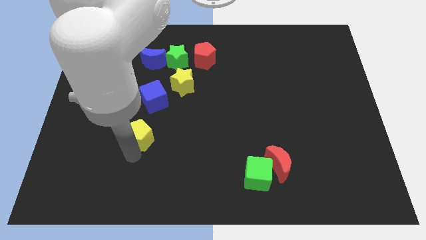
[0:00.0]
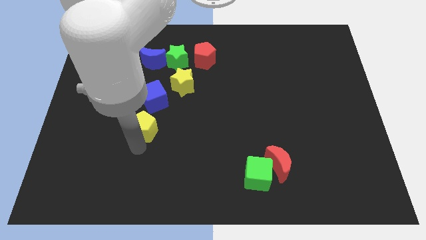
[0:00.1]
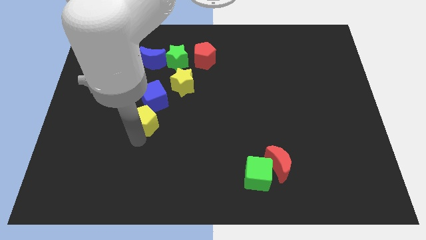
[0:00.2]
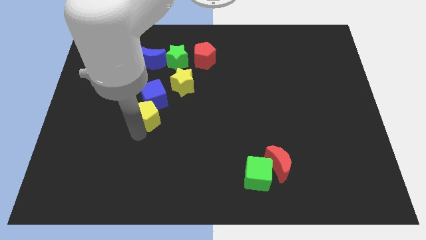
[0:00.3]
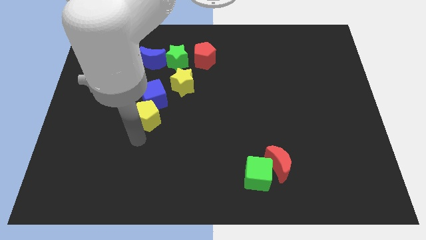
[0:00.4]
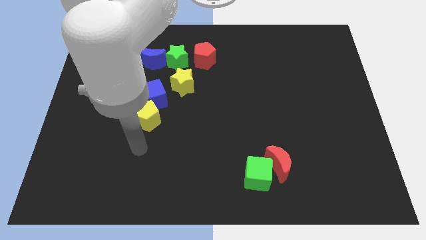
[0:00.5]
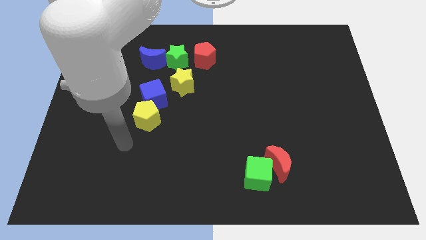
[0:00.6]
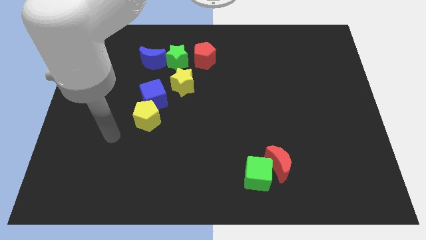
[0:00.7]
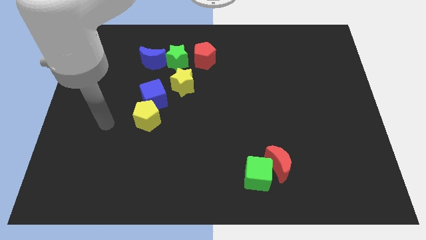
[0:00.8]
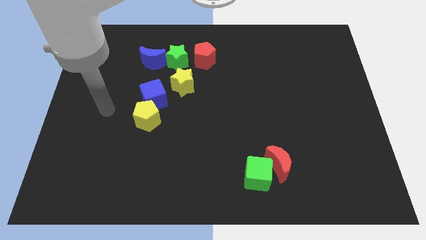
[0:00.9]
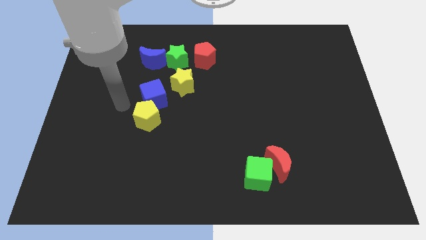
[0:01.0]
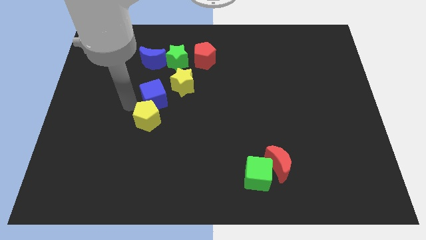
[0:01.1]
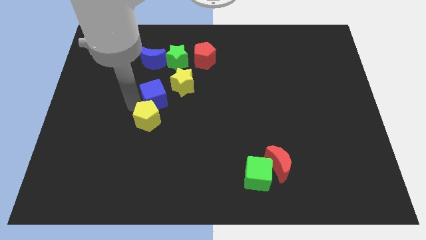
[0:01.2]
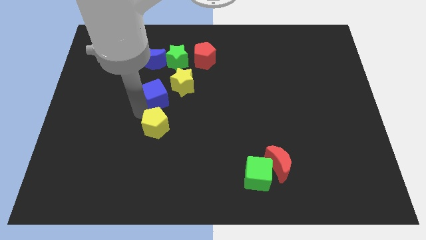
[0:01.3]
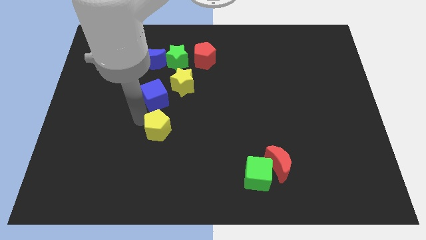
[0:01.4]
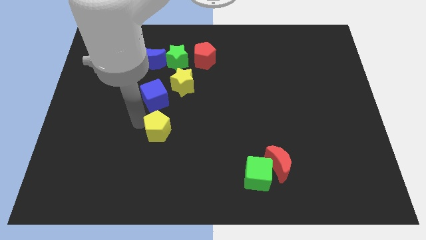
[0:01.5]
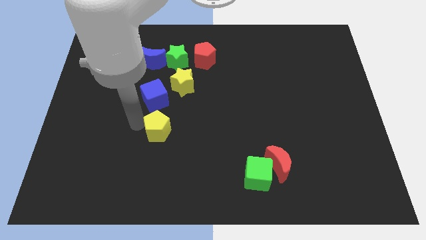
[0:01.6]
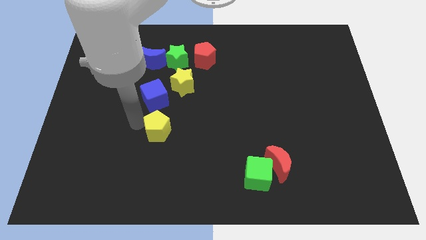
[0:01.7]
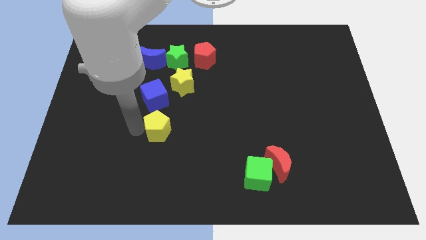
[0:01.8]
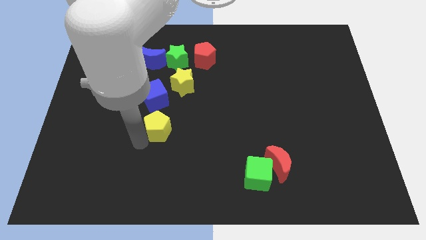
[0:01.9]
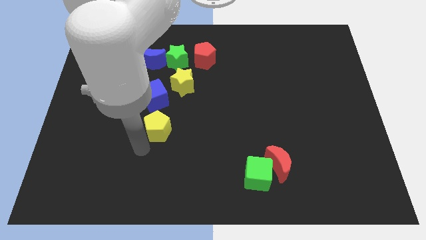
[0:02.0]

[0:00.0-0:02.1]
place the yellow pentagon below the blue cube

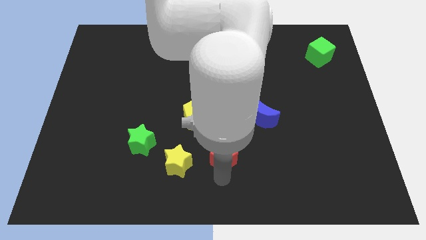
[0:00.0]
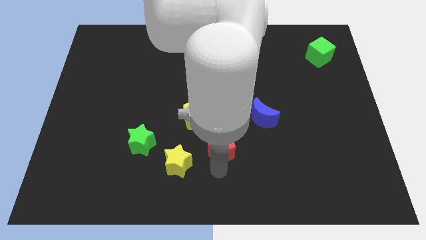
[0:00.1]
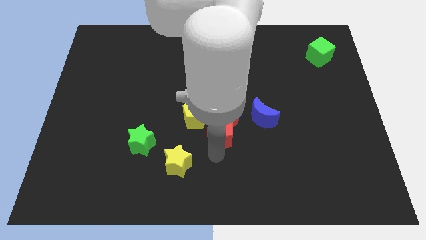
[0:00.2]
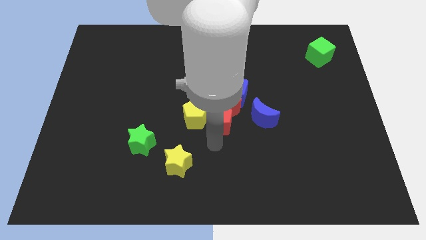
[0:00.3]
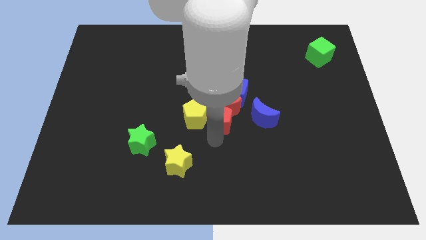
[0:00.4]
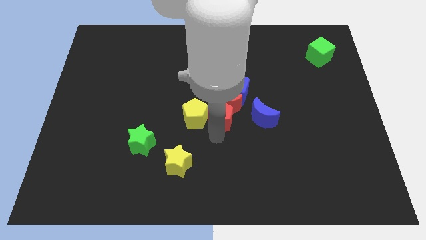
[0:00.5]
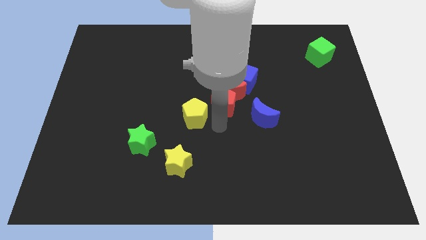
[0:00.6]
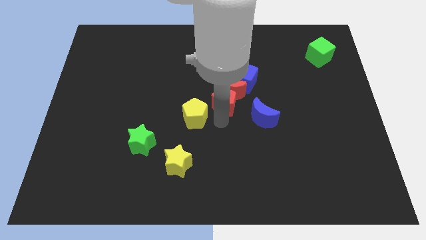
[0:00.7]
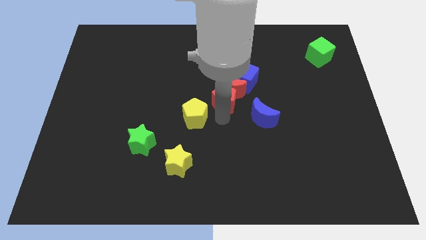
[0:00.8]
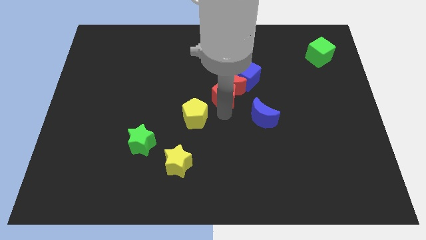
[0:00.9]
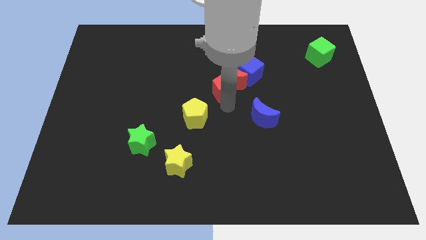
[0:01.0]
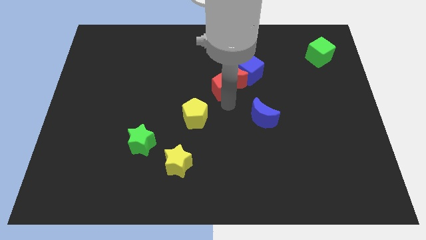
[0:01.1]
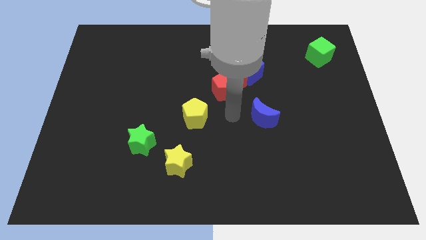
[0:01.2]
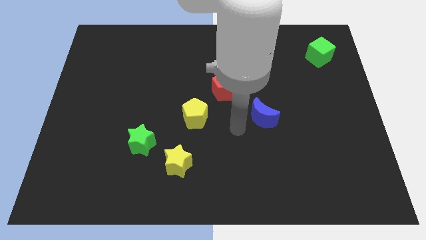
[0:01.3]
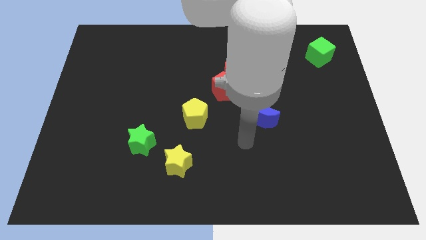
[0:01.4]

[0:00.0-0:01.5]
push the red blocks and the blue crescent towards the top center

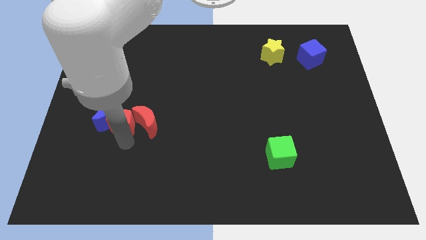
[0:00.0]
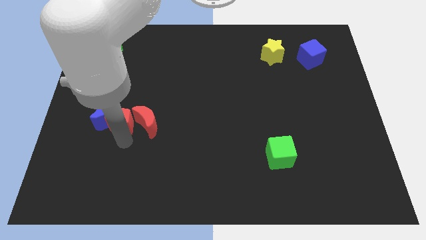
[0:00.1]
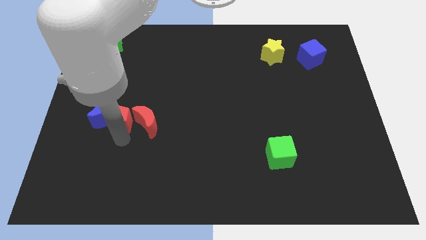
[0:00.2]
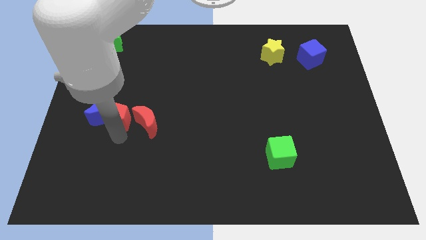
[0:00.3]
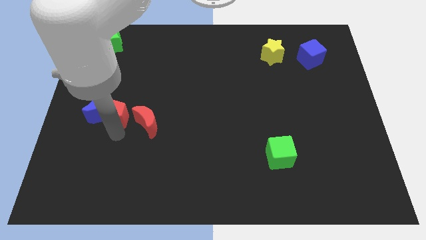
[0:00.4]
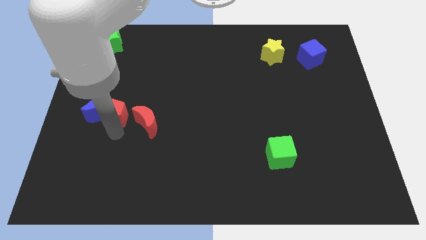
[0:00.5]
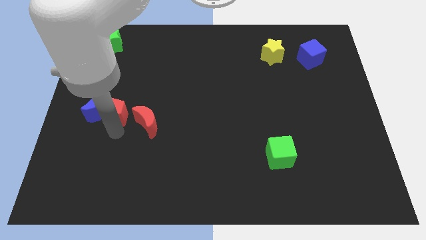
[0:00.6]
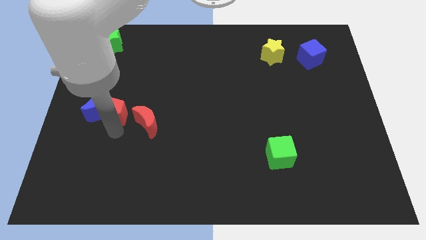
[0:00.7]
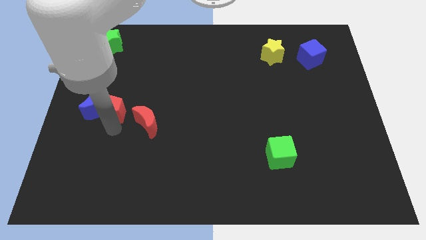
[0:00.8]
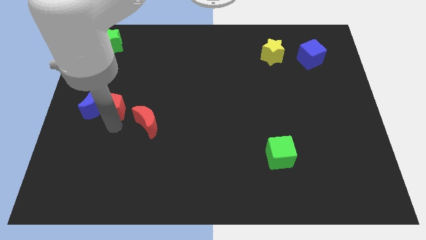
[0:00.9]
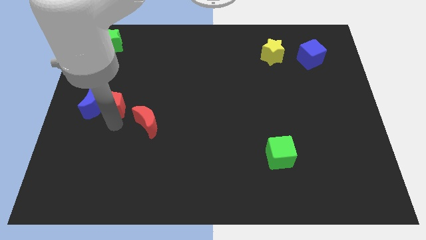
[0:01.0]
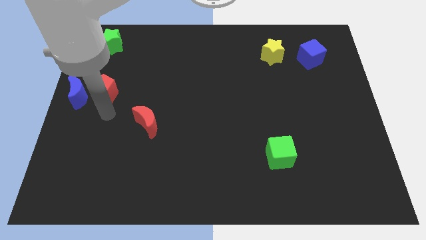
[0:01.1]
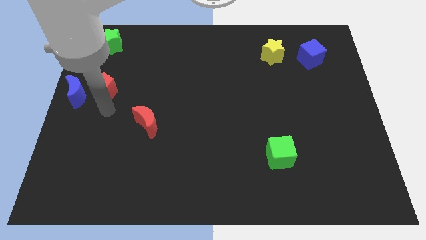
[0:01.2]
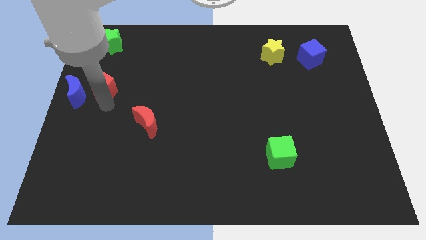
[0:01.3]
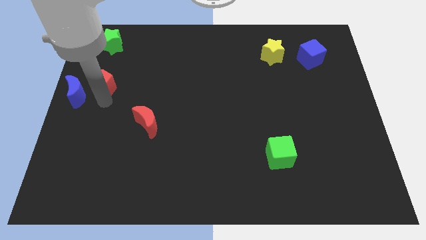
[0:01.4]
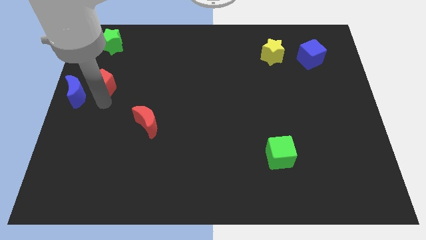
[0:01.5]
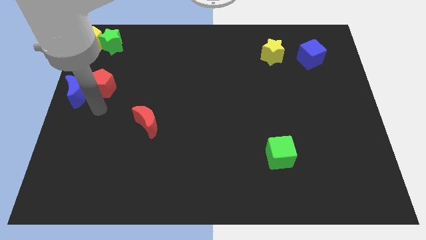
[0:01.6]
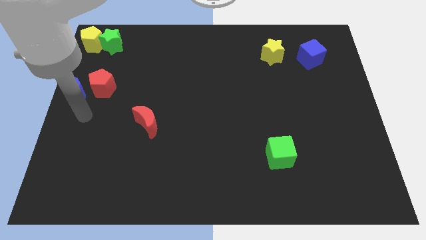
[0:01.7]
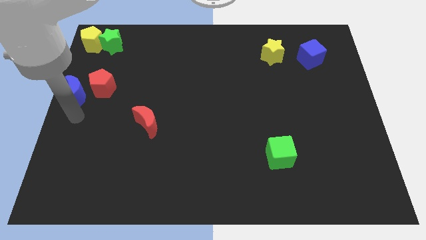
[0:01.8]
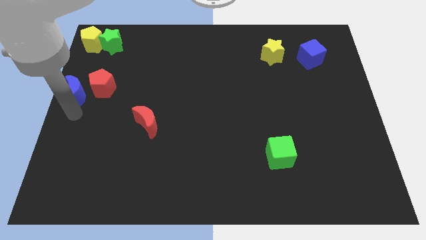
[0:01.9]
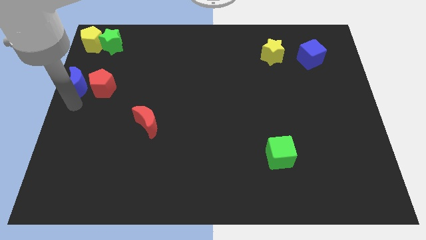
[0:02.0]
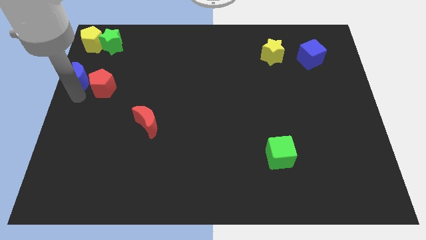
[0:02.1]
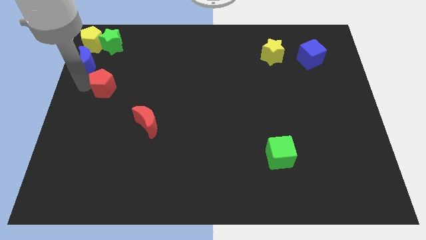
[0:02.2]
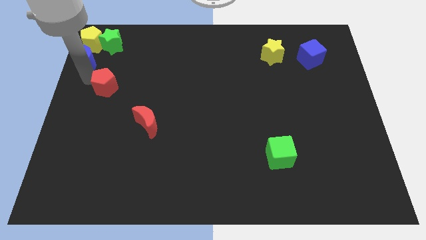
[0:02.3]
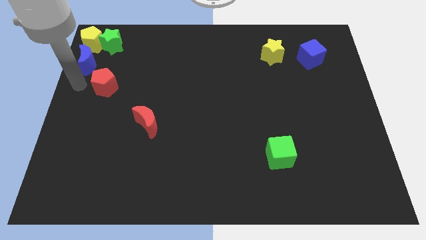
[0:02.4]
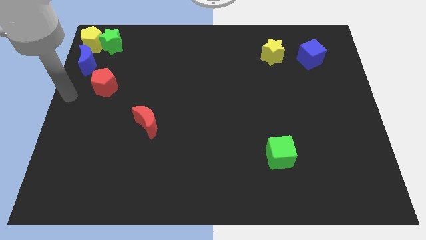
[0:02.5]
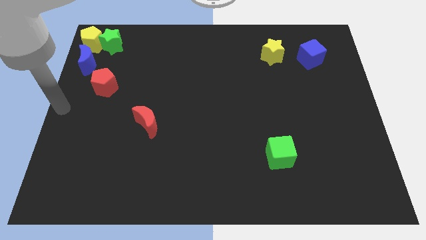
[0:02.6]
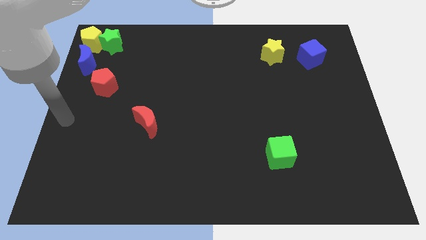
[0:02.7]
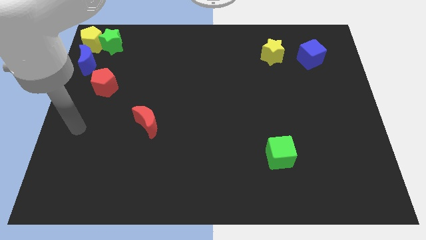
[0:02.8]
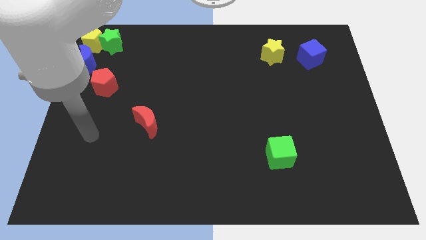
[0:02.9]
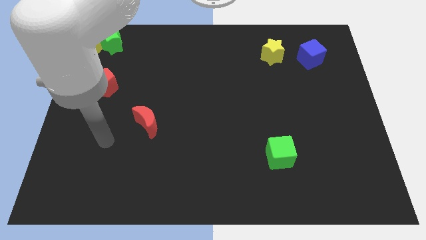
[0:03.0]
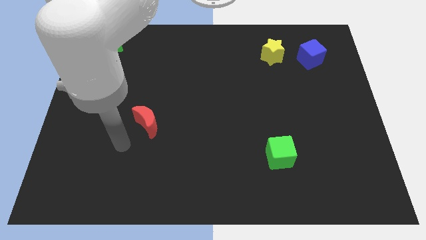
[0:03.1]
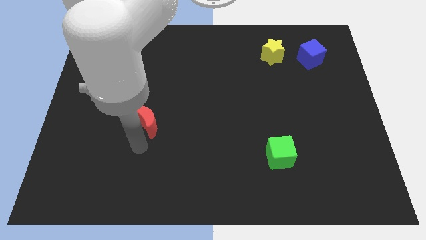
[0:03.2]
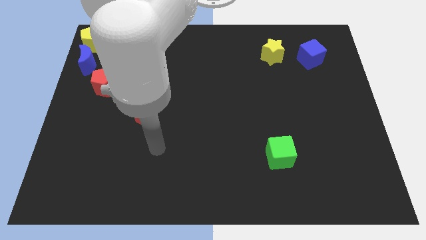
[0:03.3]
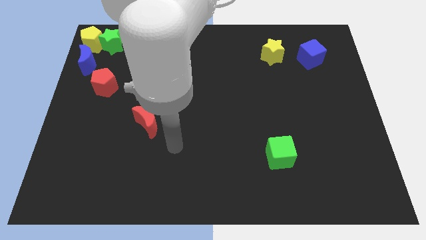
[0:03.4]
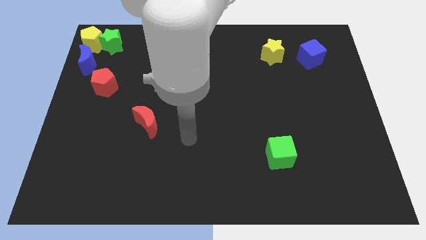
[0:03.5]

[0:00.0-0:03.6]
place the red pentagon below the green star

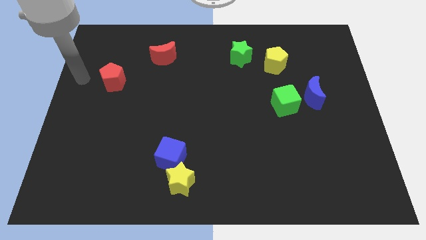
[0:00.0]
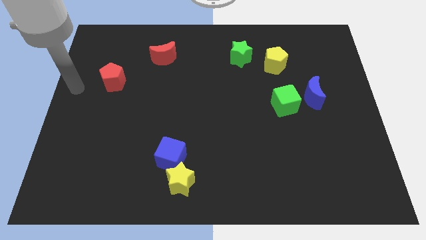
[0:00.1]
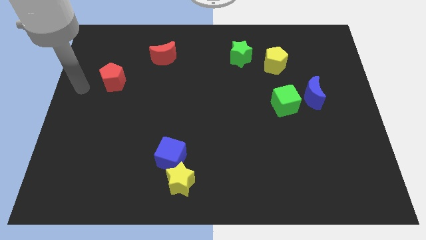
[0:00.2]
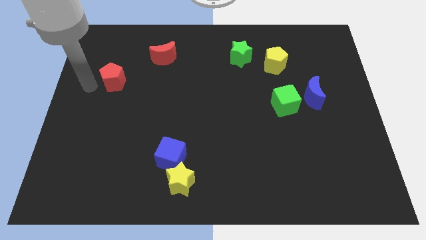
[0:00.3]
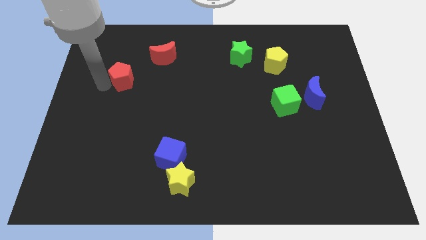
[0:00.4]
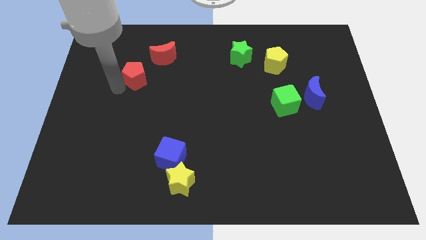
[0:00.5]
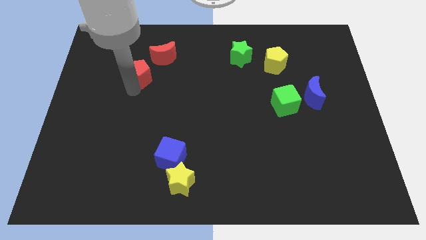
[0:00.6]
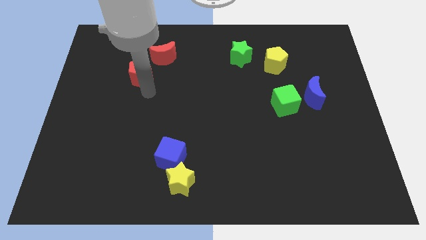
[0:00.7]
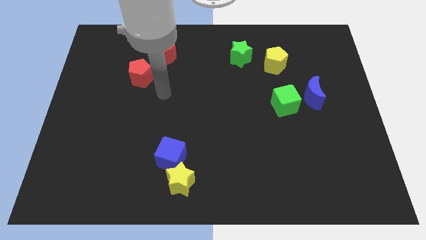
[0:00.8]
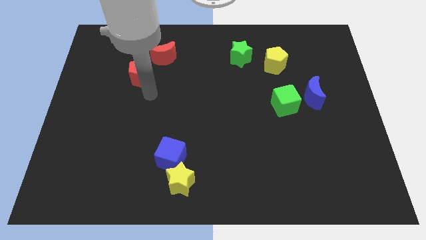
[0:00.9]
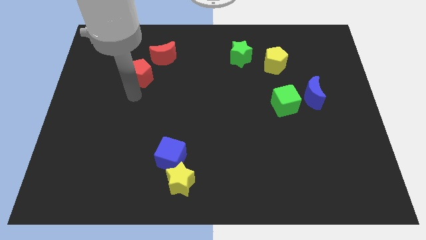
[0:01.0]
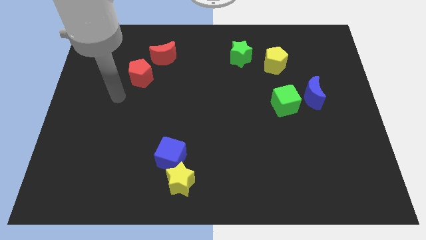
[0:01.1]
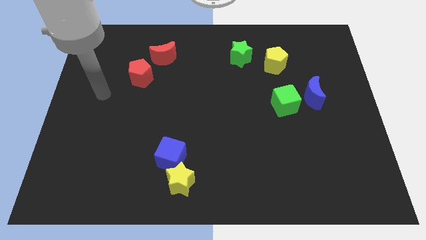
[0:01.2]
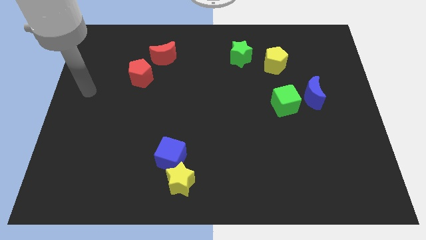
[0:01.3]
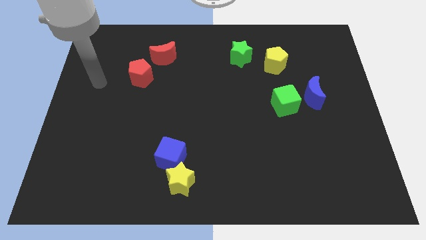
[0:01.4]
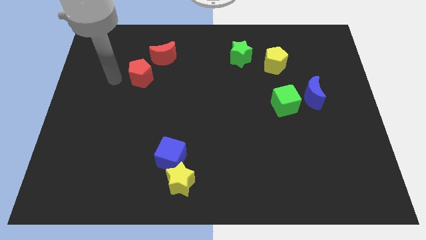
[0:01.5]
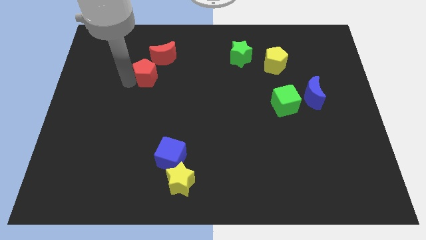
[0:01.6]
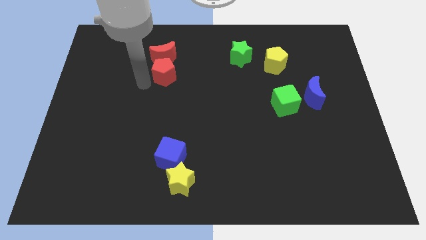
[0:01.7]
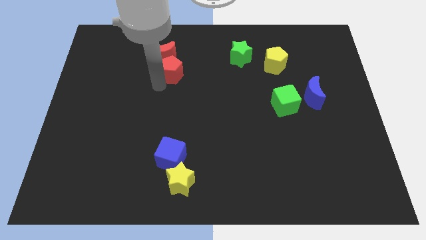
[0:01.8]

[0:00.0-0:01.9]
place the red pentagon below the red moon
